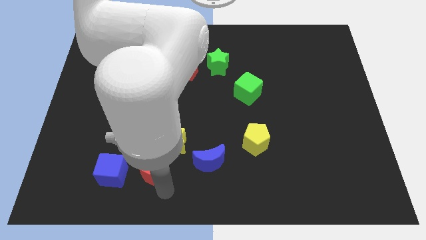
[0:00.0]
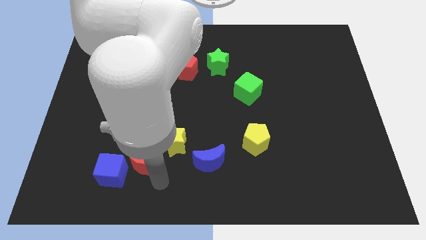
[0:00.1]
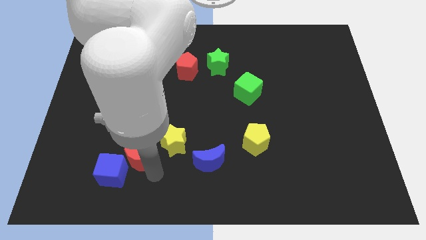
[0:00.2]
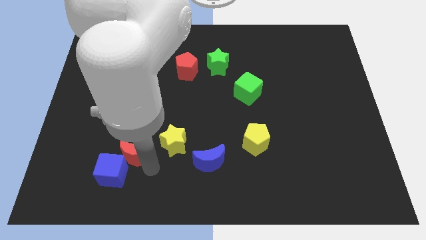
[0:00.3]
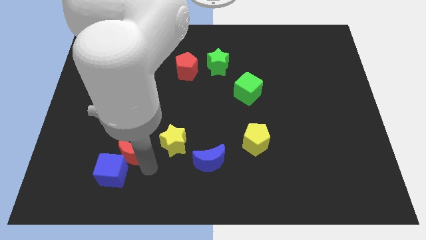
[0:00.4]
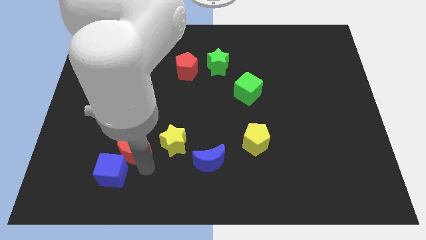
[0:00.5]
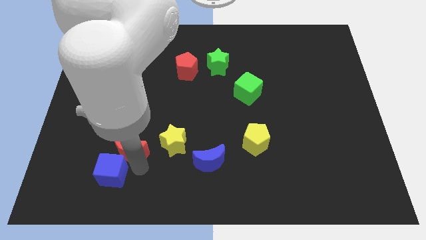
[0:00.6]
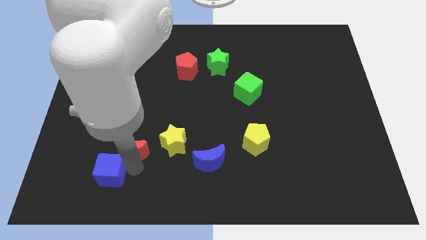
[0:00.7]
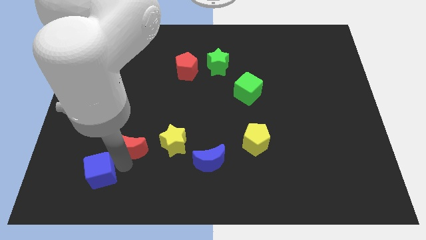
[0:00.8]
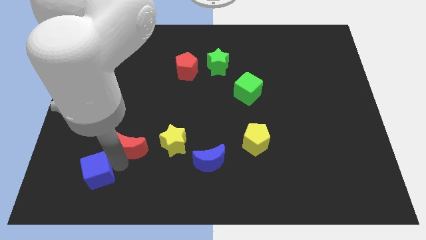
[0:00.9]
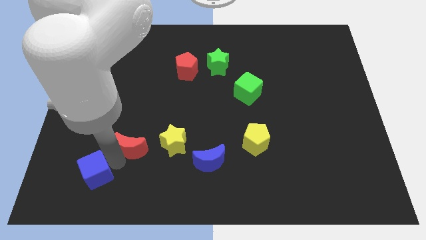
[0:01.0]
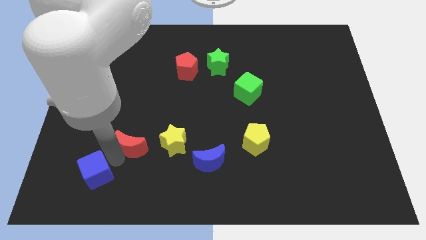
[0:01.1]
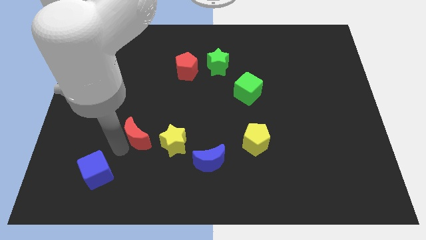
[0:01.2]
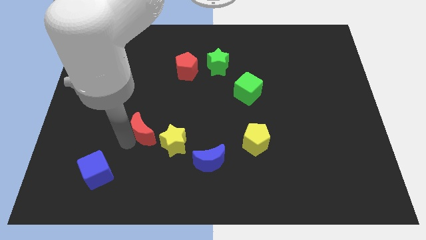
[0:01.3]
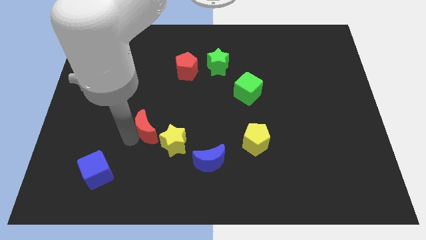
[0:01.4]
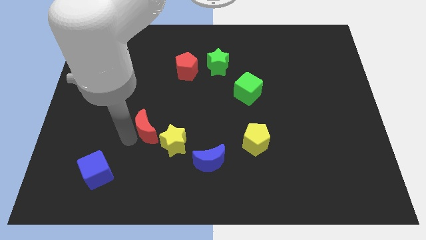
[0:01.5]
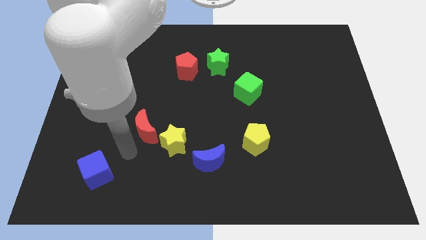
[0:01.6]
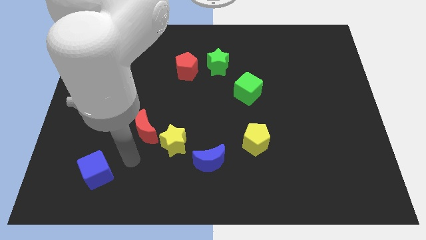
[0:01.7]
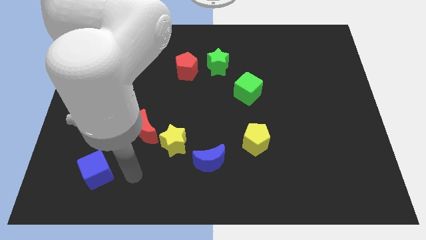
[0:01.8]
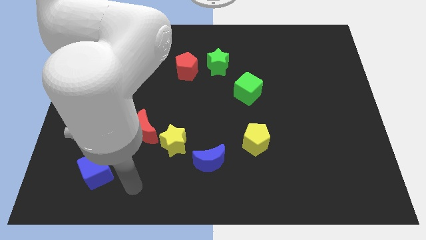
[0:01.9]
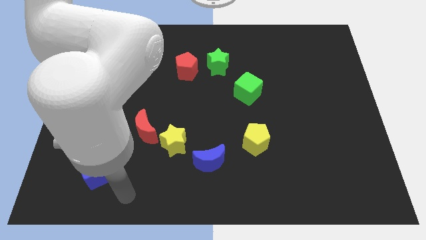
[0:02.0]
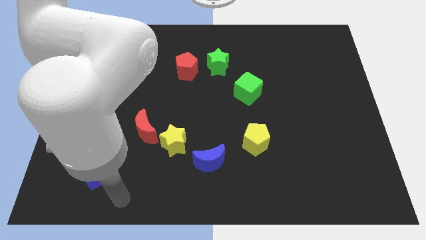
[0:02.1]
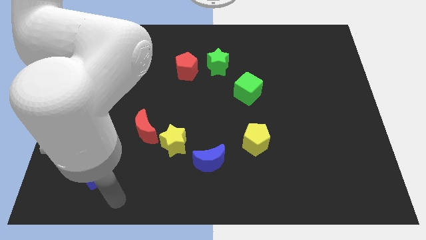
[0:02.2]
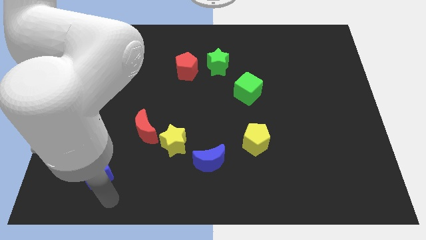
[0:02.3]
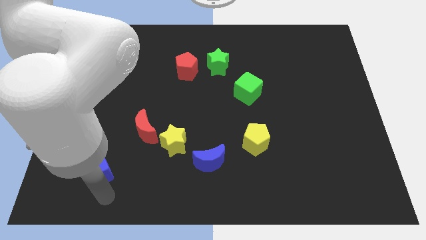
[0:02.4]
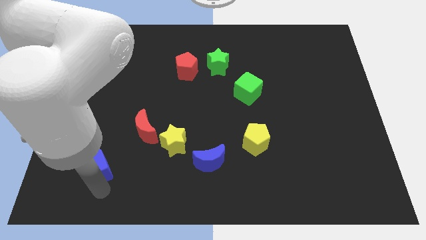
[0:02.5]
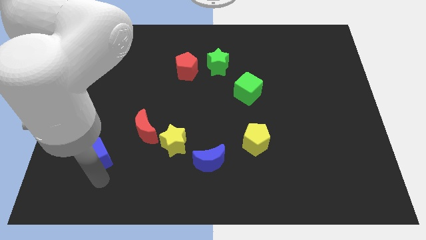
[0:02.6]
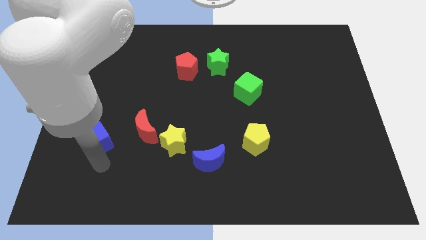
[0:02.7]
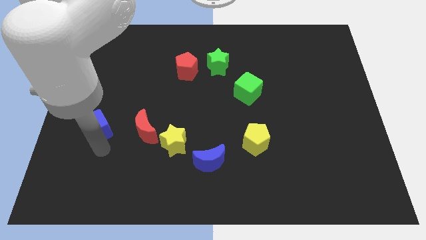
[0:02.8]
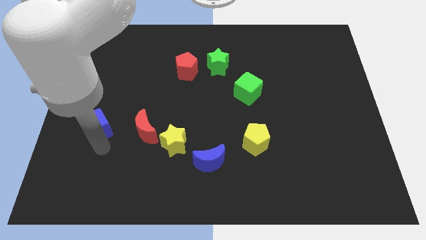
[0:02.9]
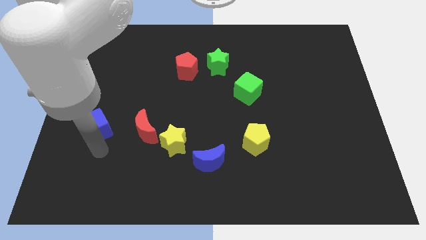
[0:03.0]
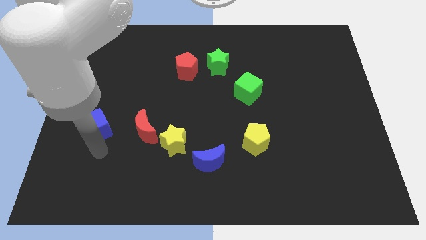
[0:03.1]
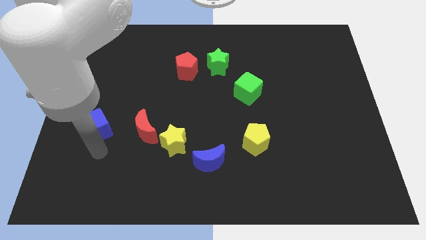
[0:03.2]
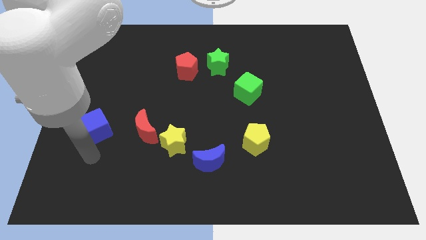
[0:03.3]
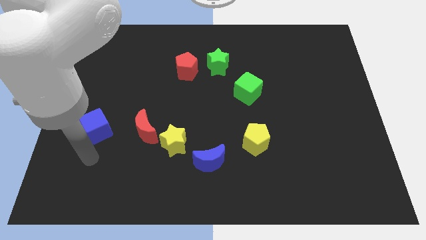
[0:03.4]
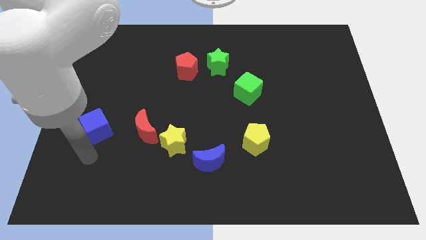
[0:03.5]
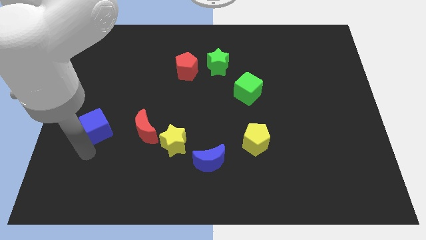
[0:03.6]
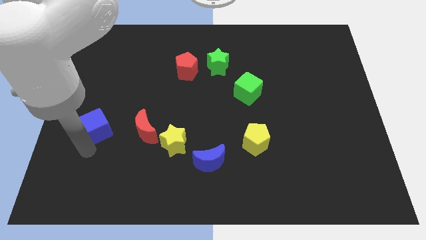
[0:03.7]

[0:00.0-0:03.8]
push the blue cube to the left side of the red moon

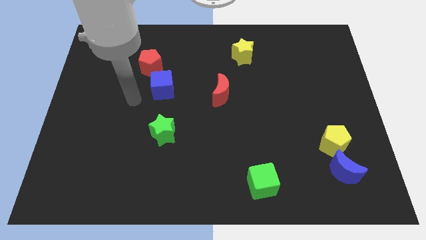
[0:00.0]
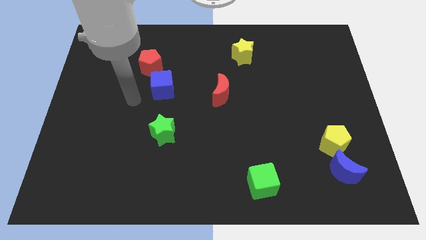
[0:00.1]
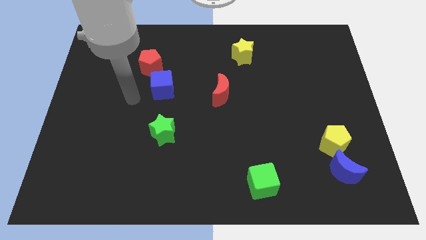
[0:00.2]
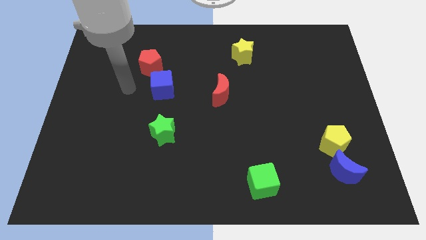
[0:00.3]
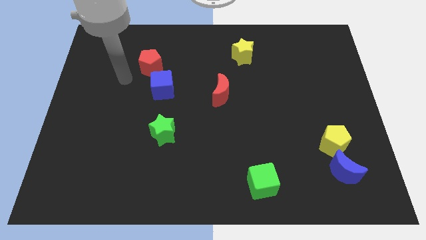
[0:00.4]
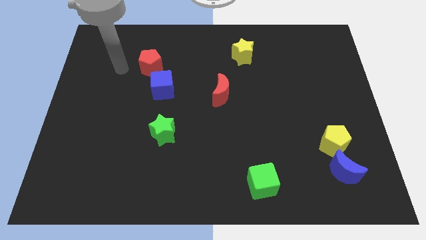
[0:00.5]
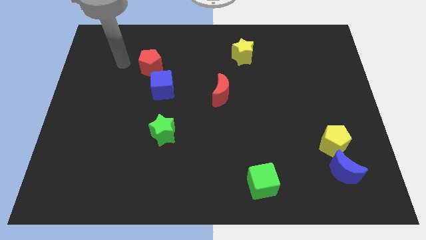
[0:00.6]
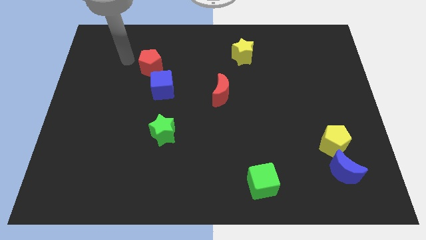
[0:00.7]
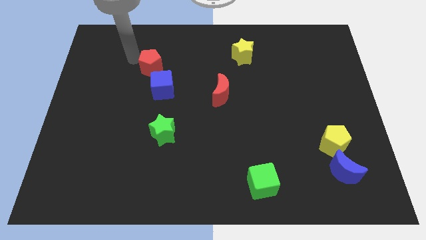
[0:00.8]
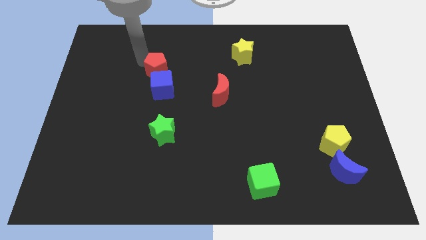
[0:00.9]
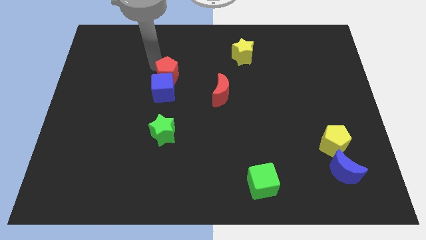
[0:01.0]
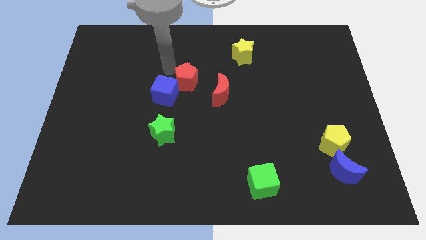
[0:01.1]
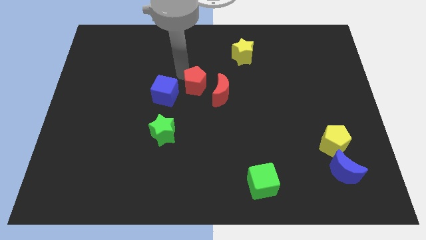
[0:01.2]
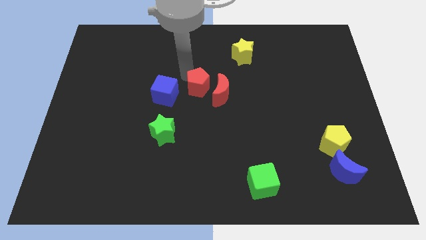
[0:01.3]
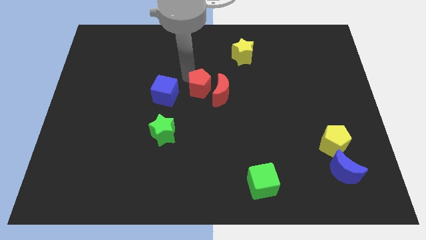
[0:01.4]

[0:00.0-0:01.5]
place red pentagon to the right of blue cube

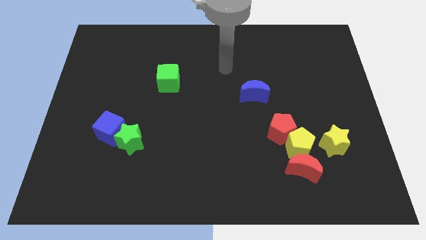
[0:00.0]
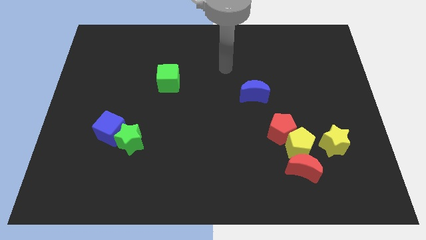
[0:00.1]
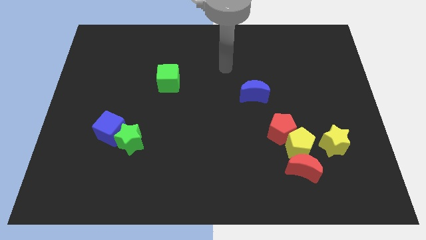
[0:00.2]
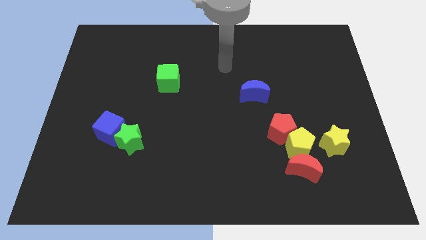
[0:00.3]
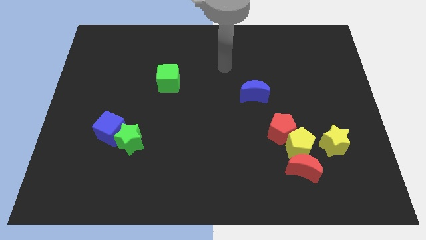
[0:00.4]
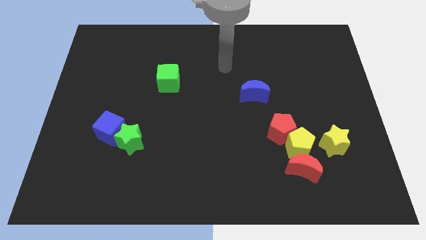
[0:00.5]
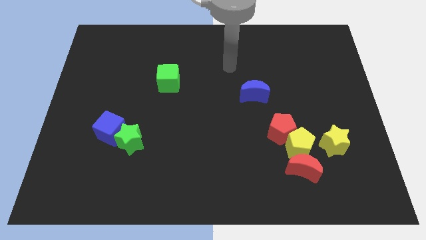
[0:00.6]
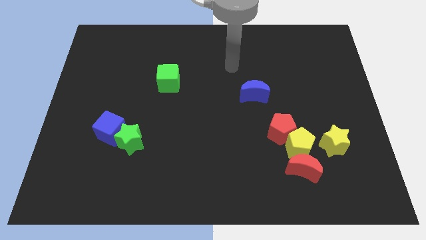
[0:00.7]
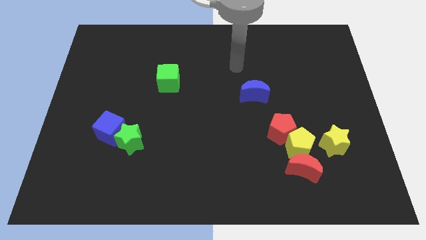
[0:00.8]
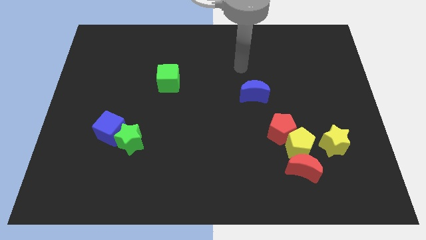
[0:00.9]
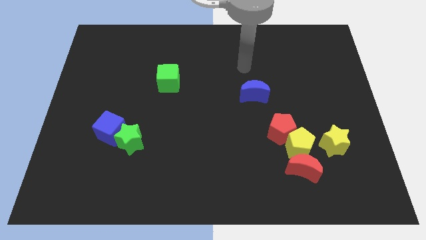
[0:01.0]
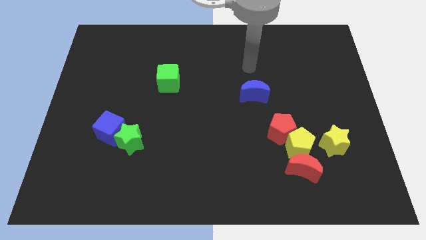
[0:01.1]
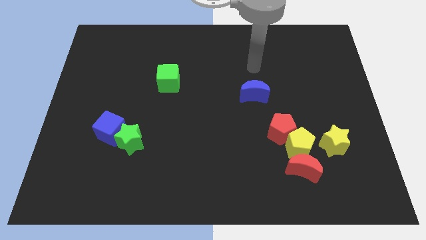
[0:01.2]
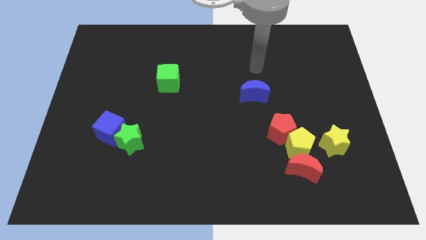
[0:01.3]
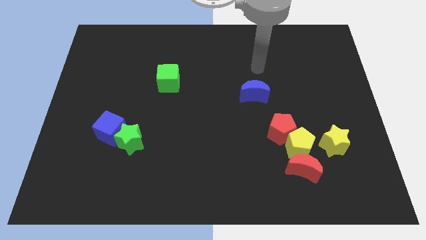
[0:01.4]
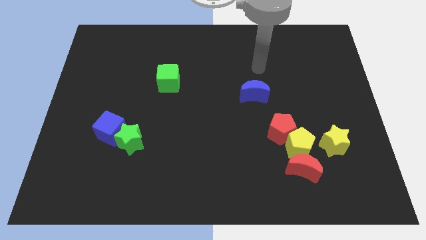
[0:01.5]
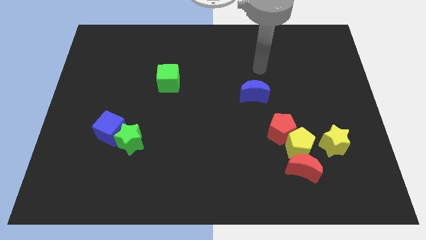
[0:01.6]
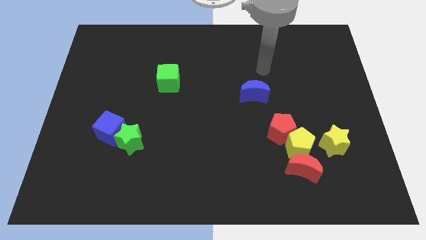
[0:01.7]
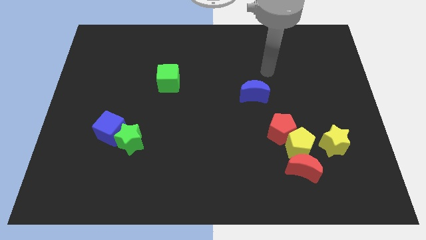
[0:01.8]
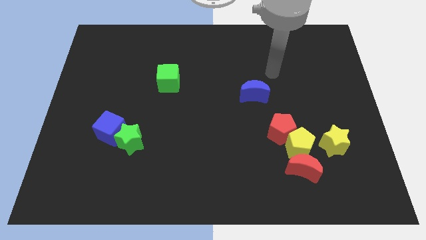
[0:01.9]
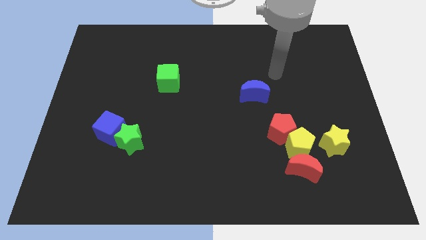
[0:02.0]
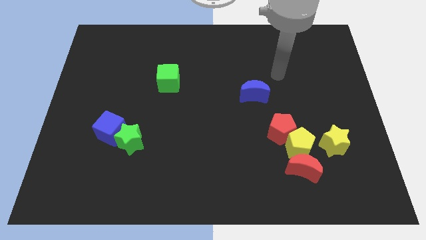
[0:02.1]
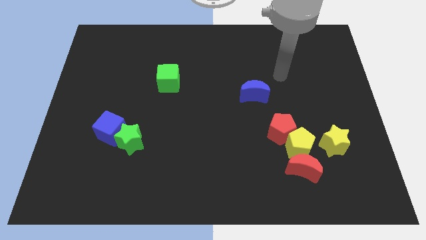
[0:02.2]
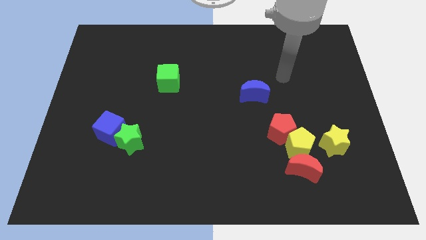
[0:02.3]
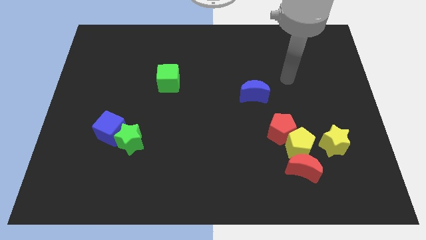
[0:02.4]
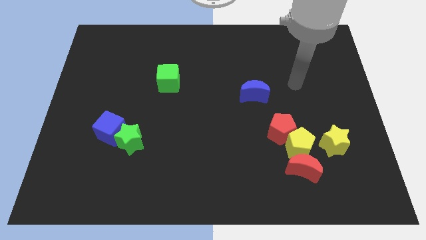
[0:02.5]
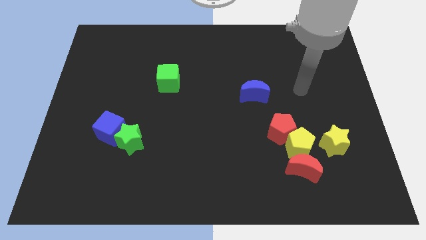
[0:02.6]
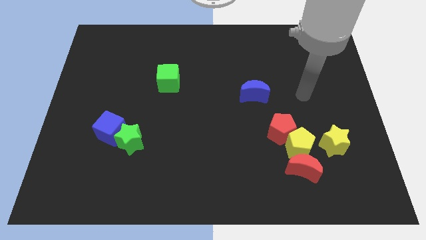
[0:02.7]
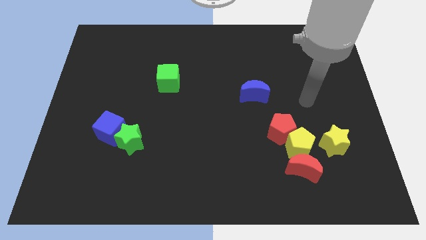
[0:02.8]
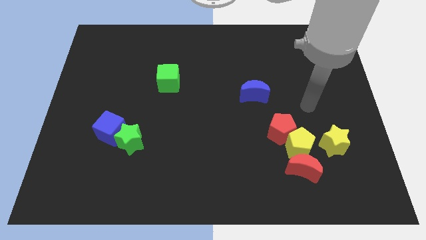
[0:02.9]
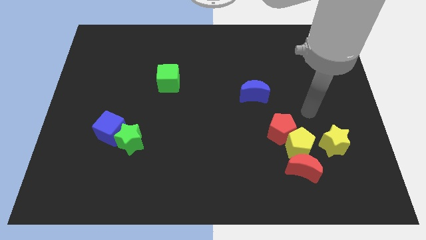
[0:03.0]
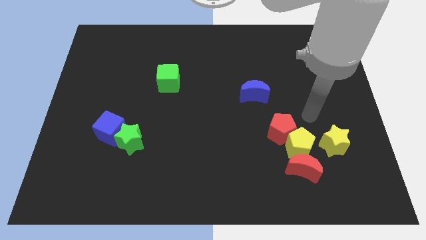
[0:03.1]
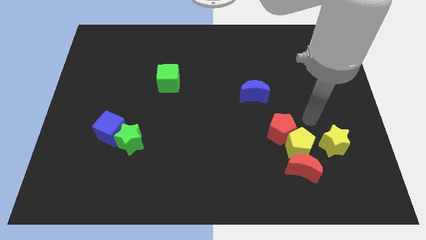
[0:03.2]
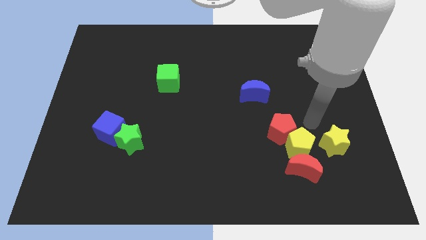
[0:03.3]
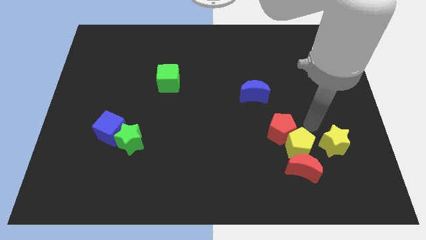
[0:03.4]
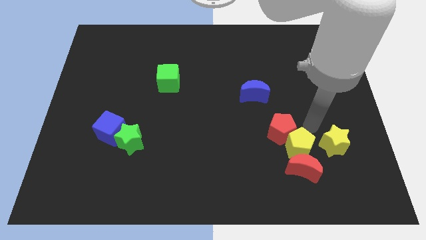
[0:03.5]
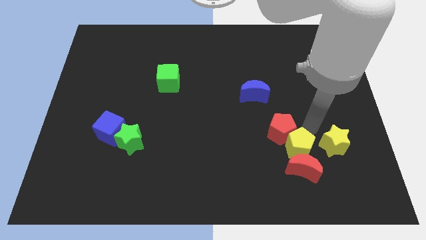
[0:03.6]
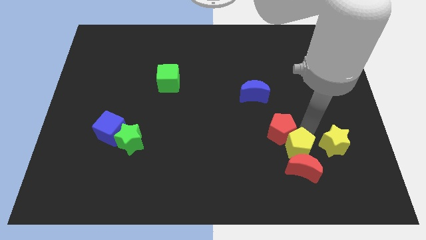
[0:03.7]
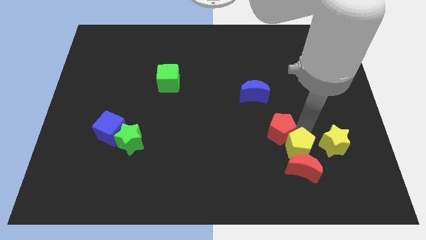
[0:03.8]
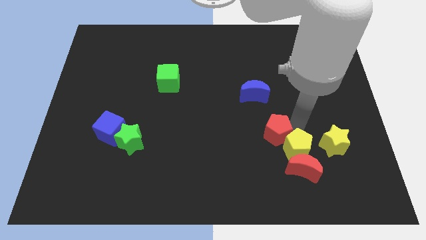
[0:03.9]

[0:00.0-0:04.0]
move your arm above the yellow pentagon
